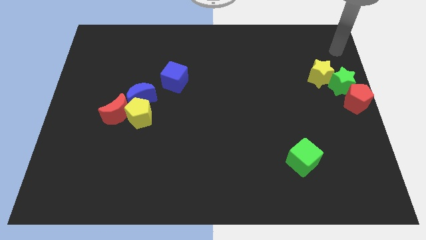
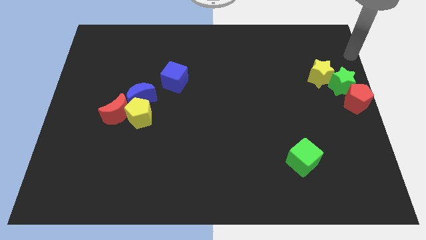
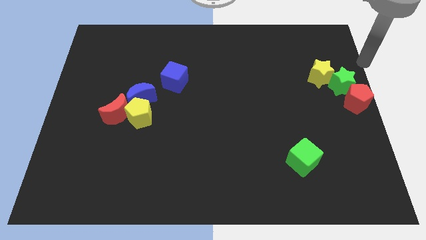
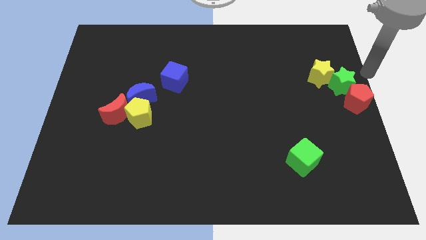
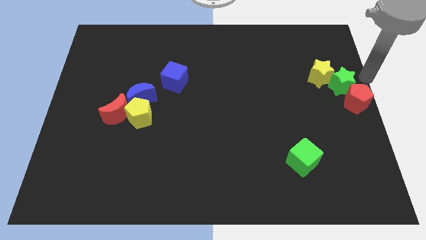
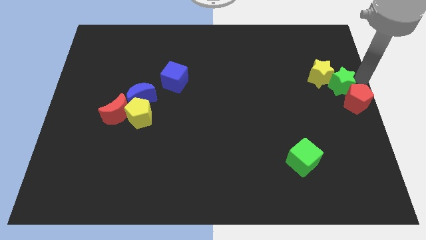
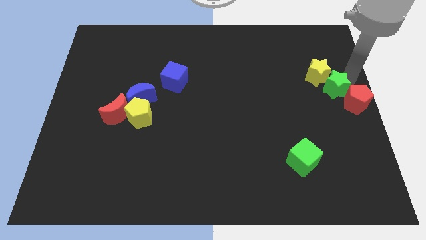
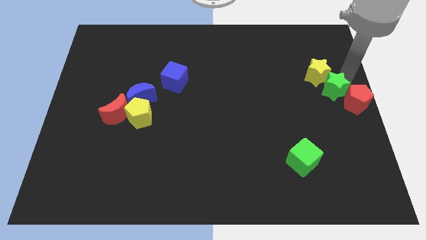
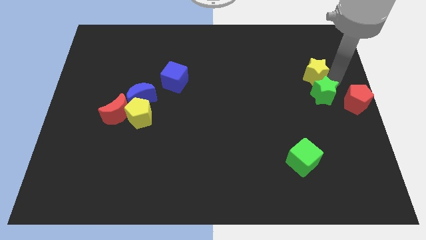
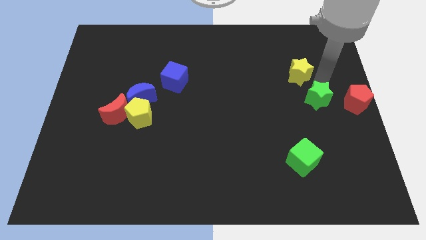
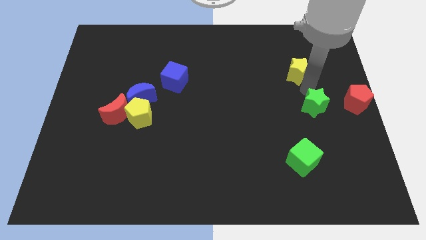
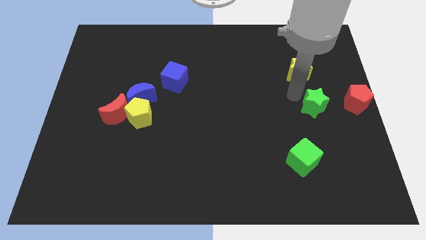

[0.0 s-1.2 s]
push green star below yellow star

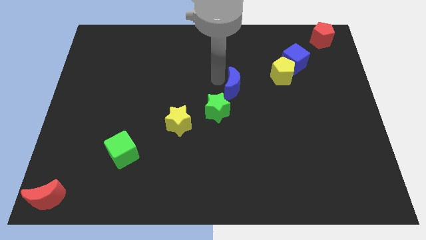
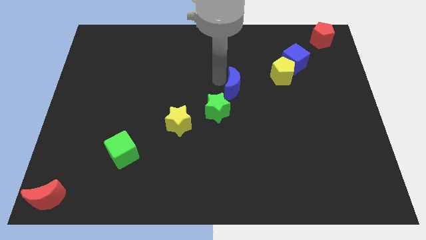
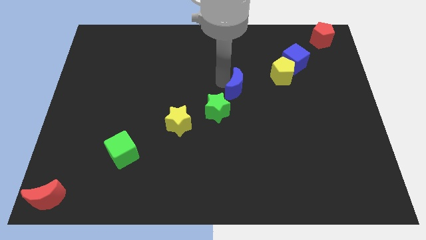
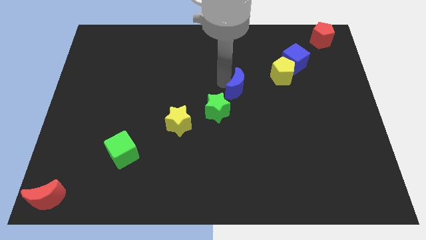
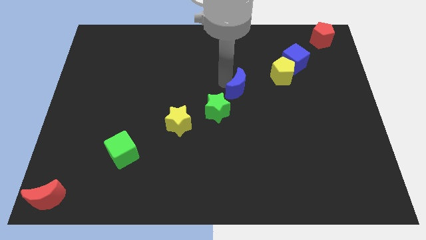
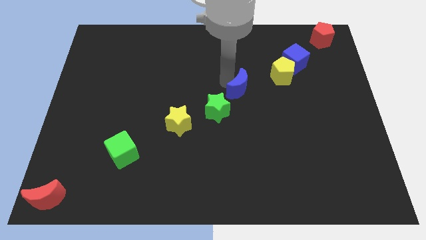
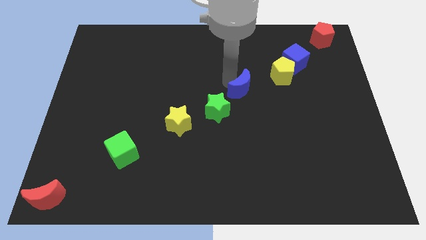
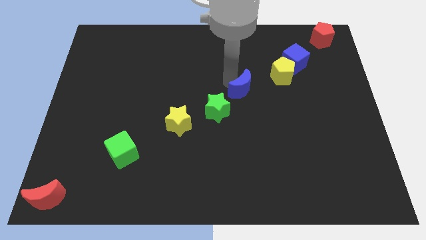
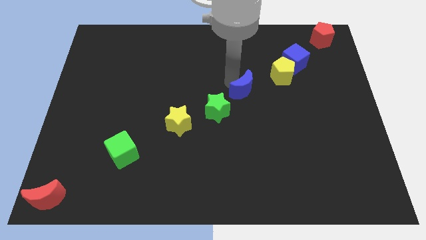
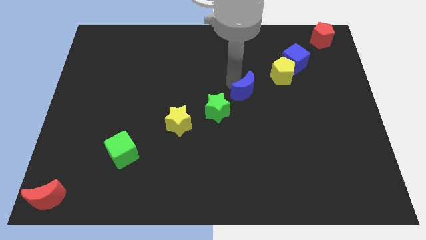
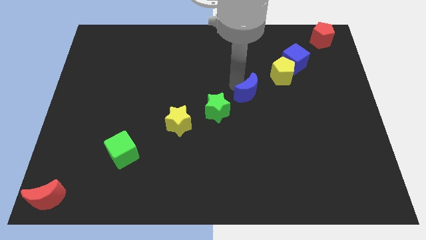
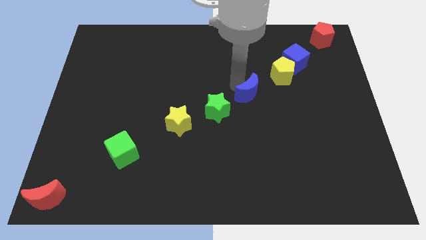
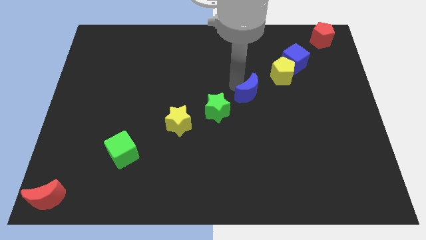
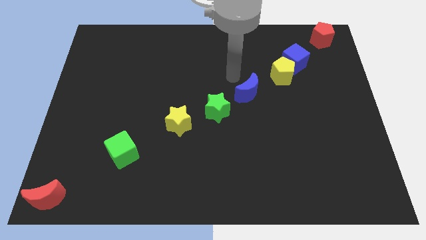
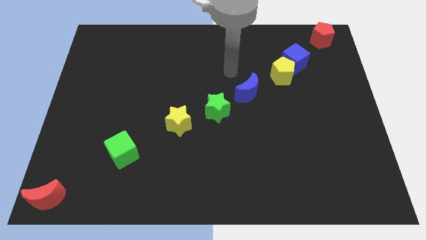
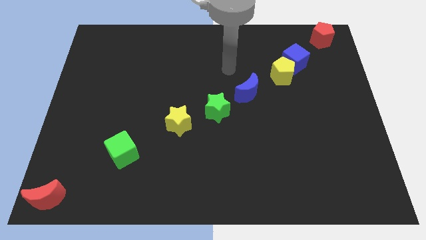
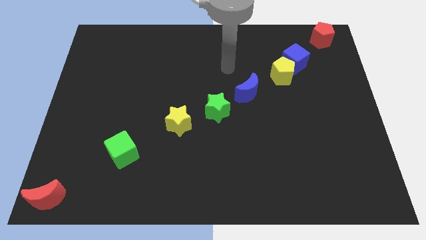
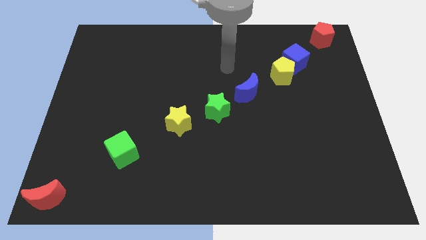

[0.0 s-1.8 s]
move the blue crescent diagonally in between the green star and the yellow pentagon

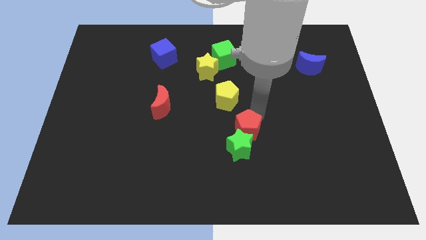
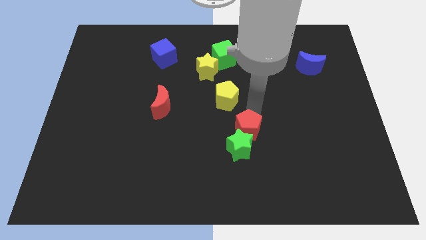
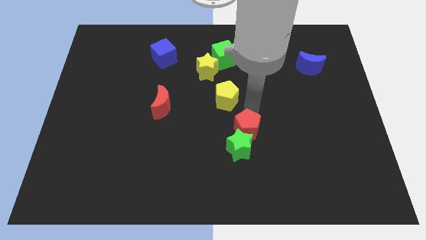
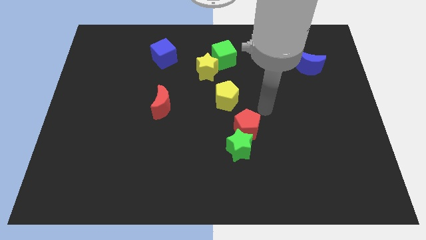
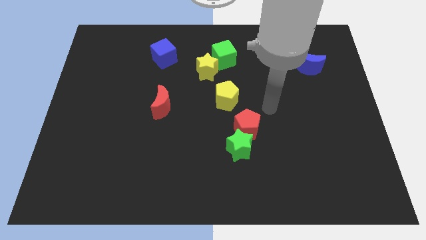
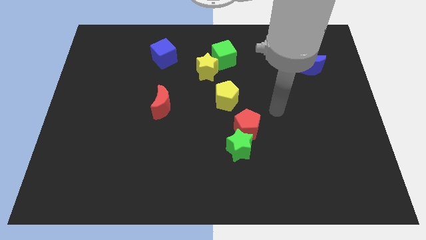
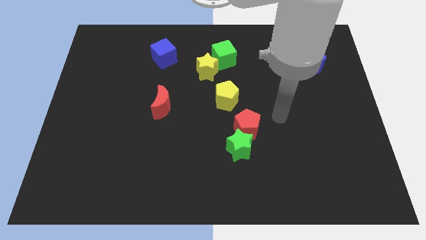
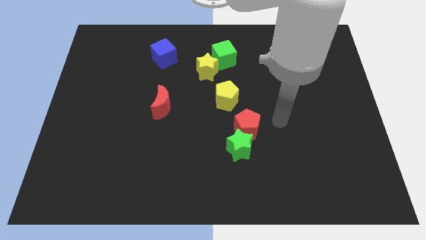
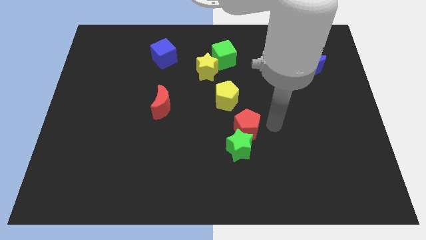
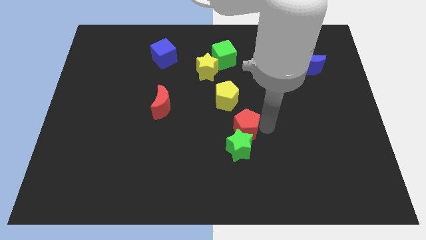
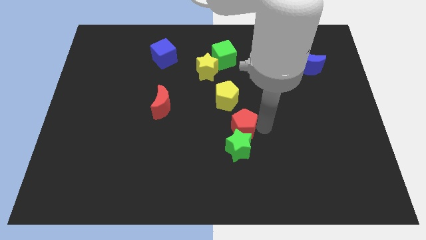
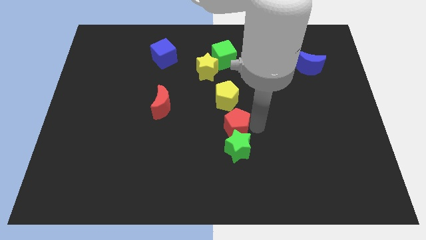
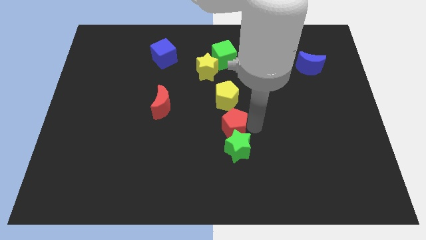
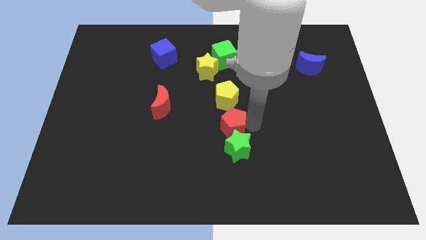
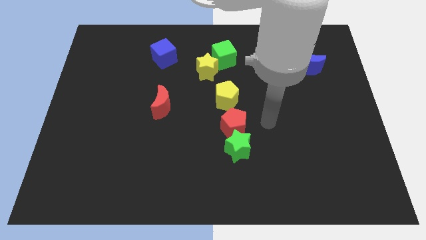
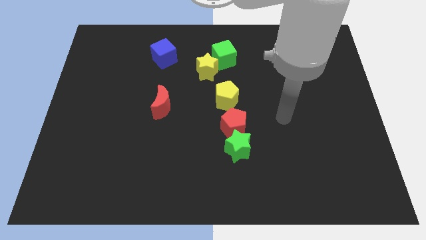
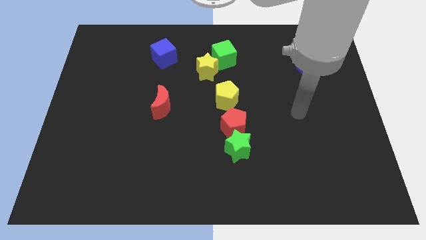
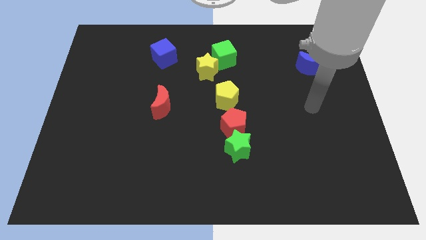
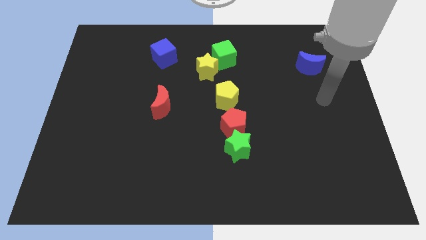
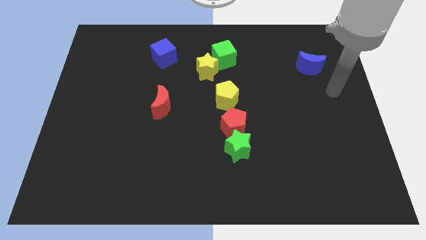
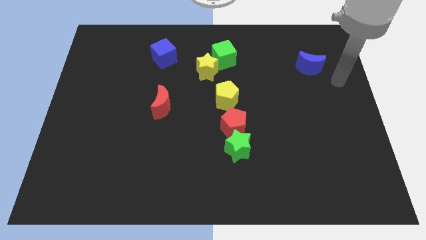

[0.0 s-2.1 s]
move the red pentagon slightly to the left

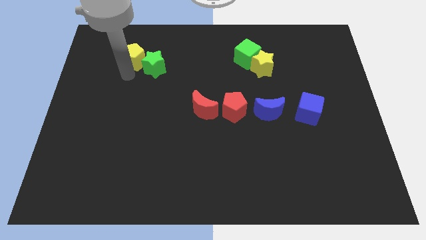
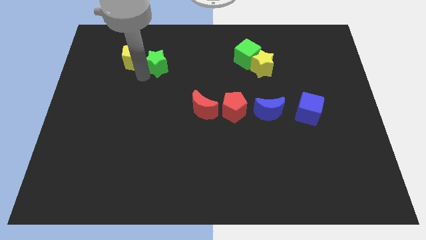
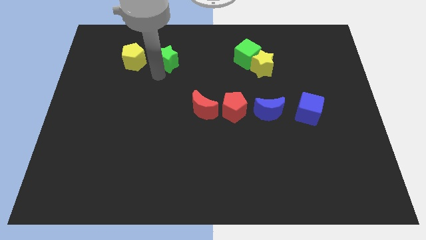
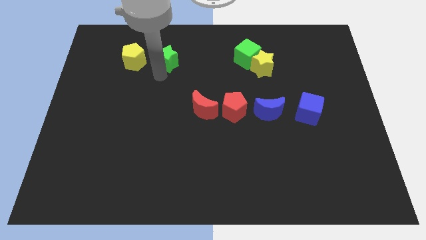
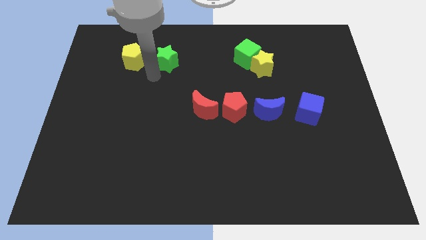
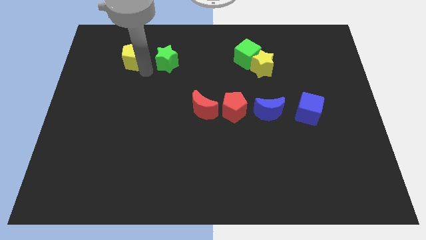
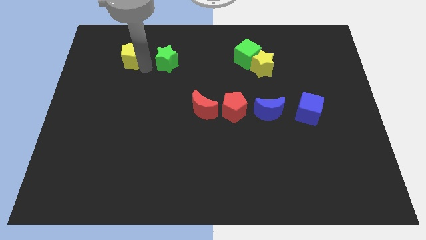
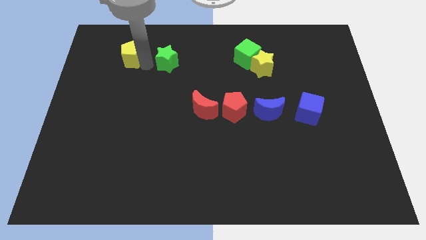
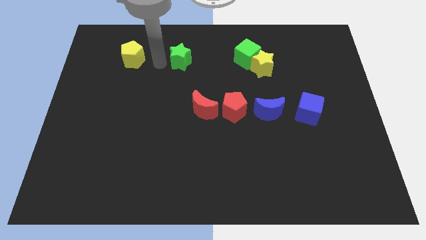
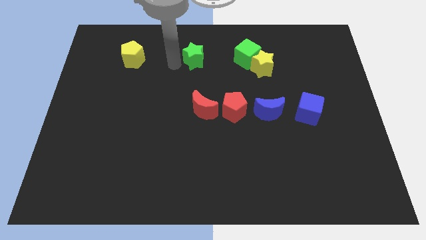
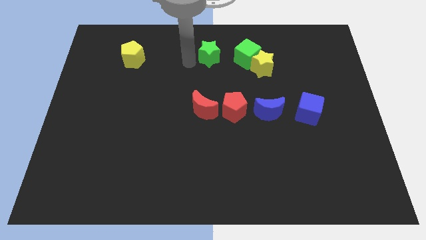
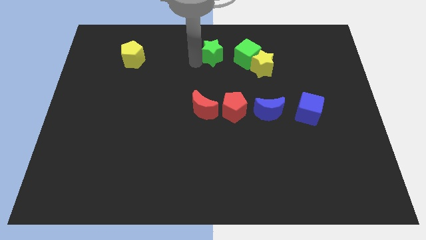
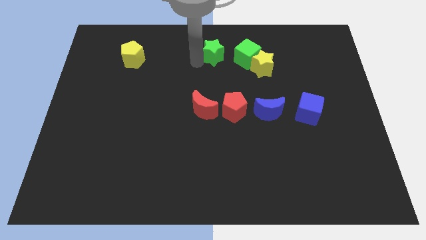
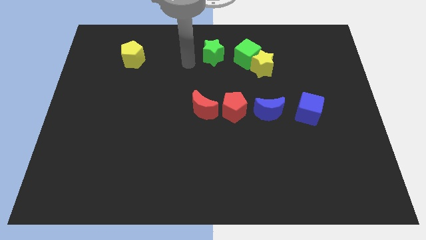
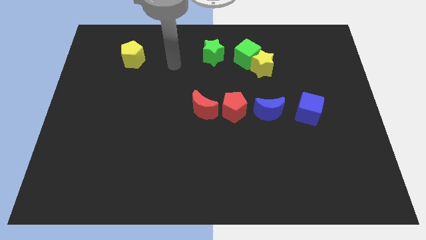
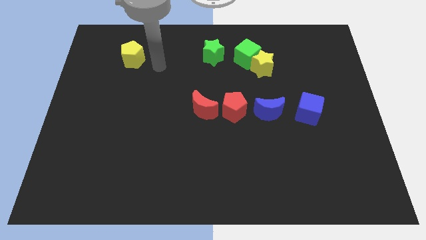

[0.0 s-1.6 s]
separate the yellow pentagon and the green star

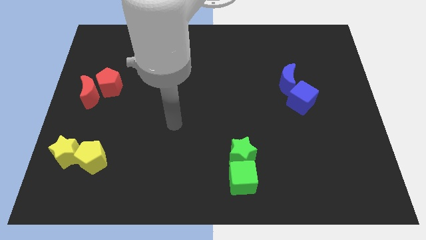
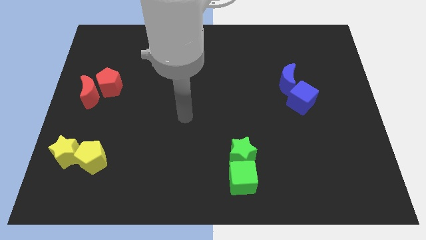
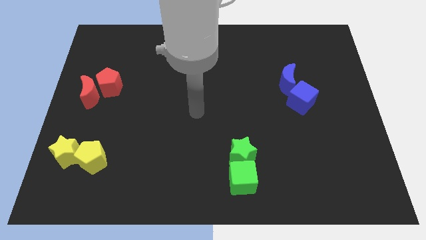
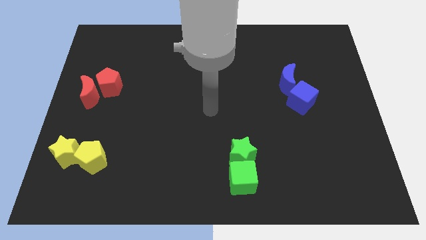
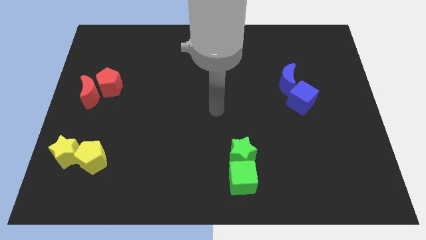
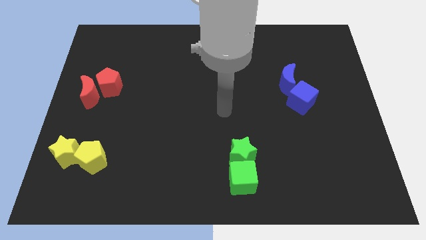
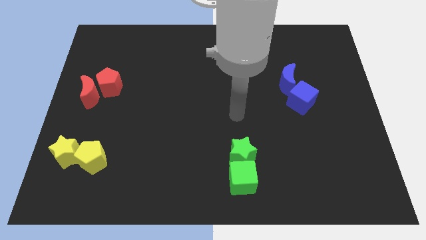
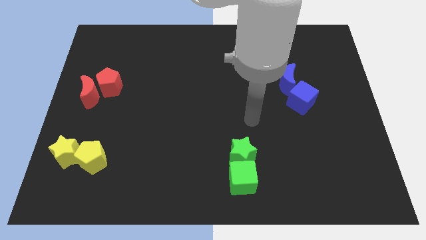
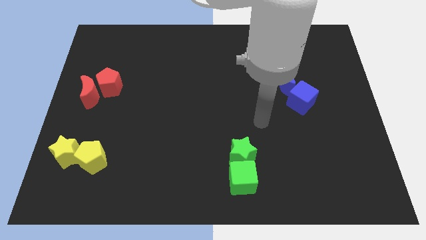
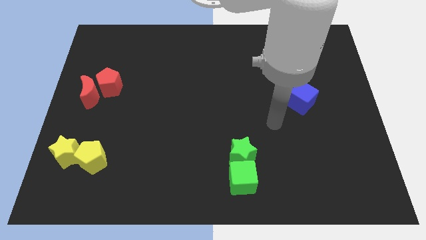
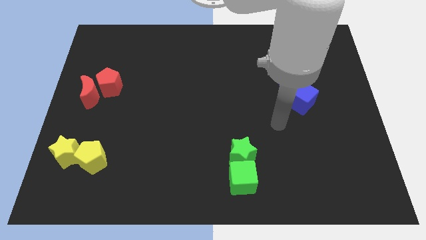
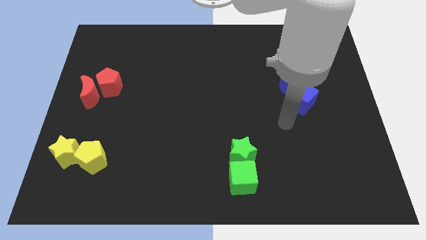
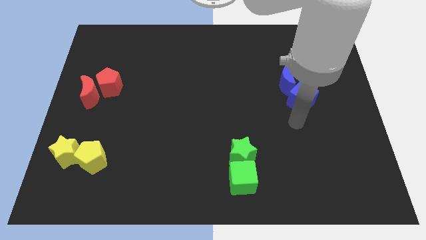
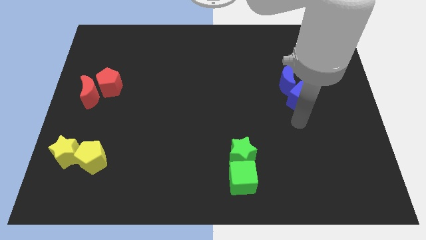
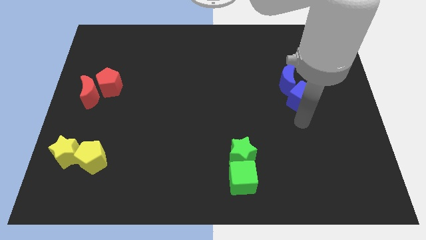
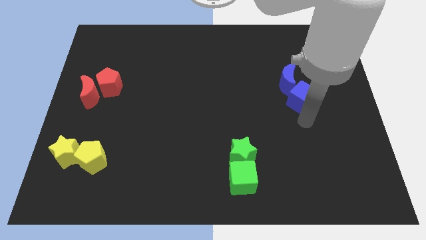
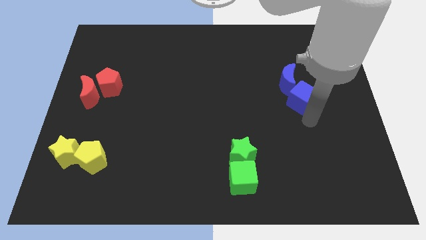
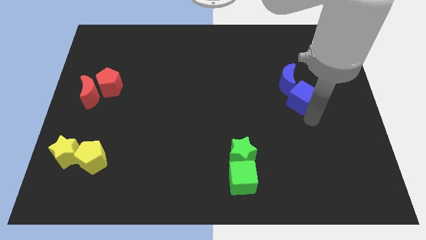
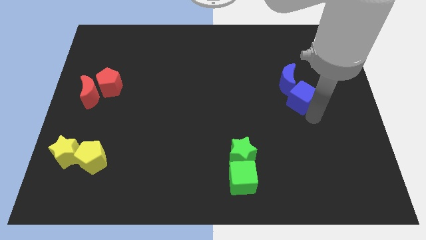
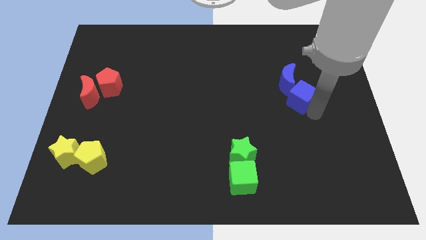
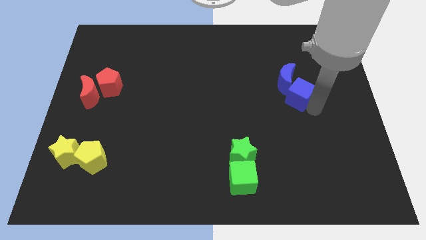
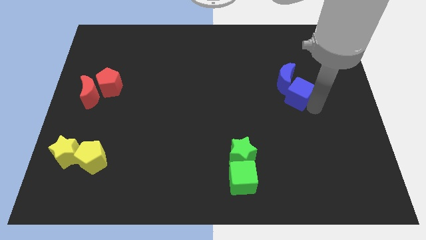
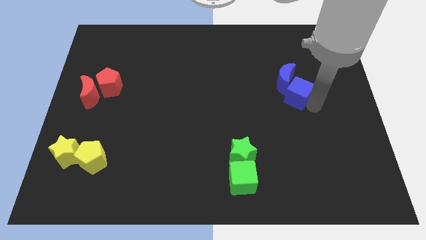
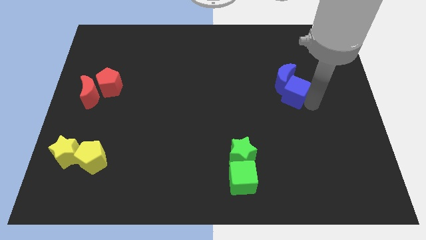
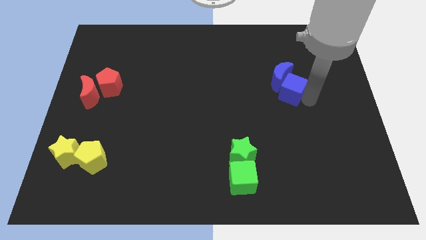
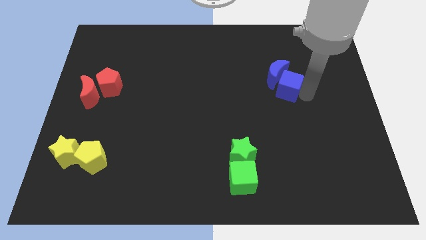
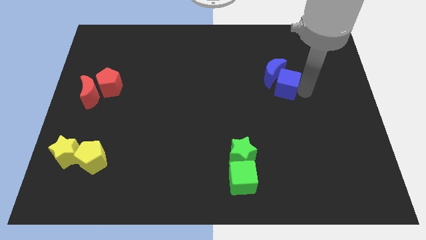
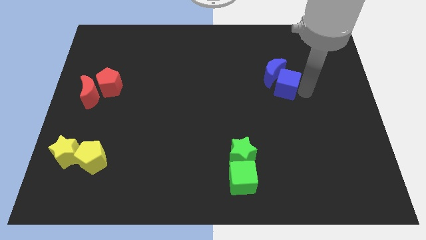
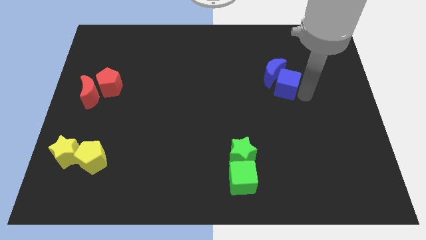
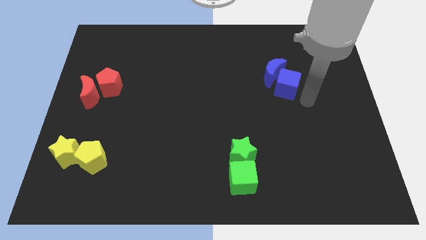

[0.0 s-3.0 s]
push blue cube slightly upwards
